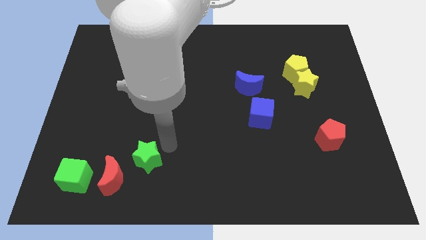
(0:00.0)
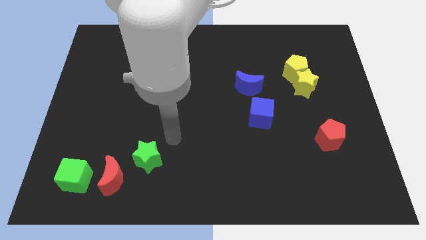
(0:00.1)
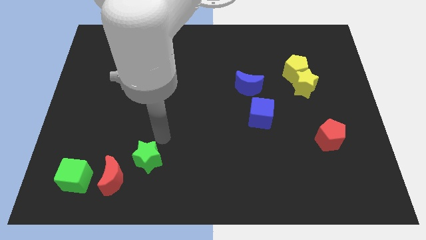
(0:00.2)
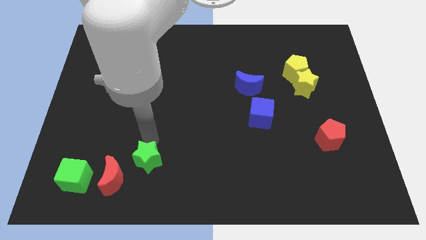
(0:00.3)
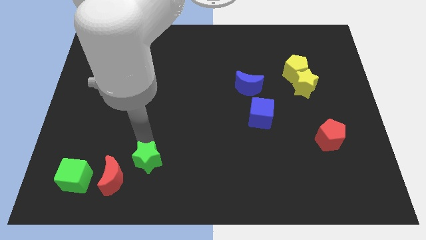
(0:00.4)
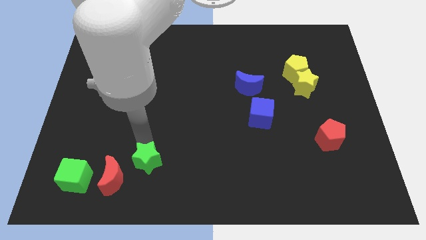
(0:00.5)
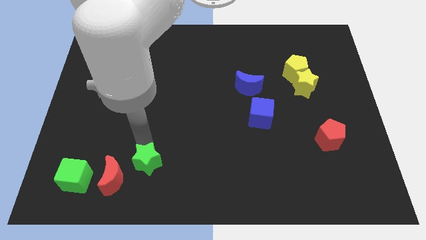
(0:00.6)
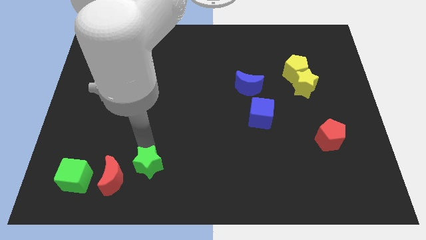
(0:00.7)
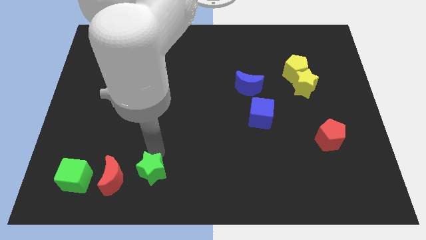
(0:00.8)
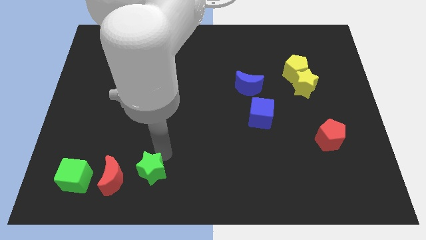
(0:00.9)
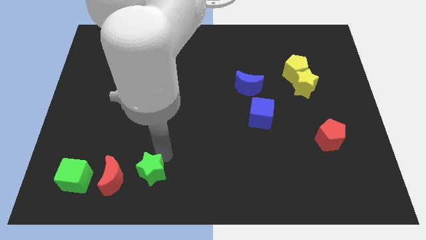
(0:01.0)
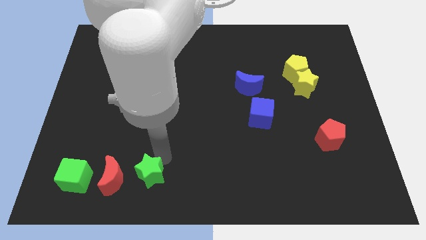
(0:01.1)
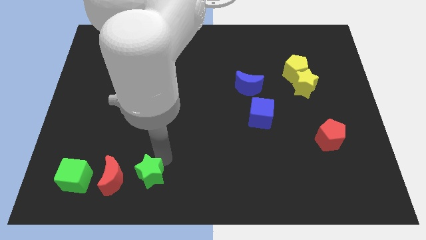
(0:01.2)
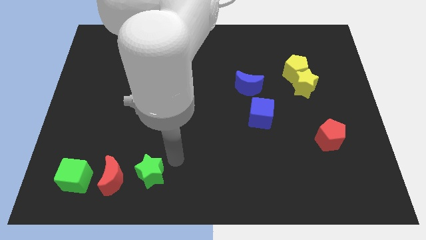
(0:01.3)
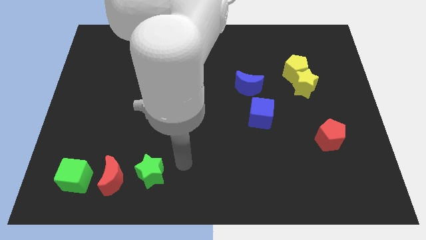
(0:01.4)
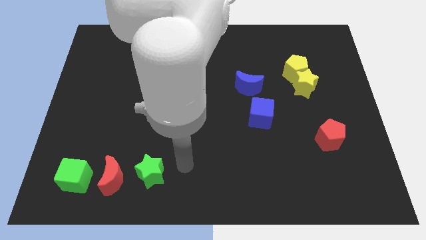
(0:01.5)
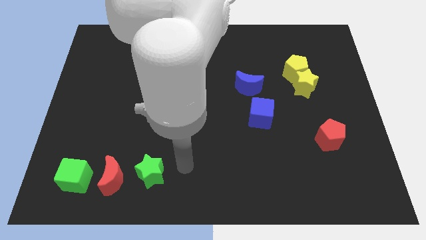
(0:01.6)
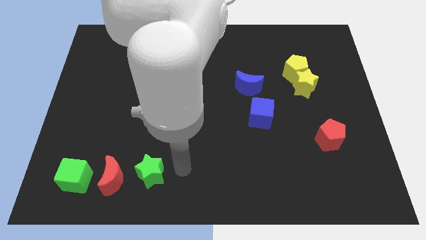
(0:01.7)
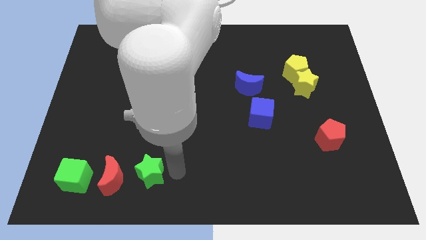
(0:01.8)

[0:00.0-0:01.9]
push the green star to the right of the red crescent

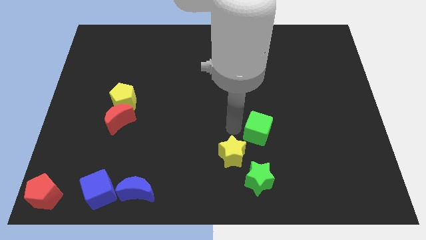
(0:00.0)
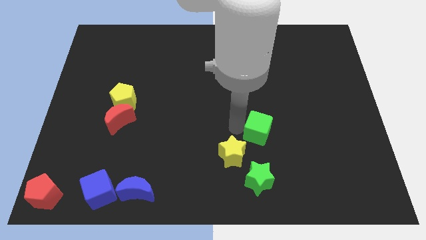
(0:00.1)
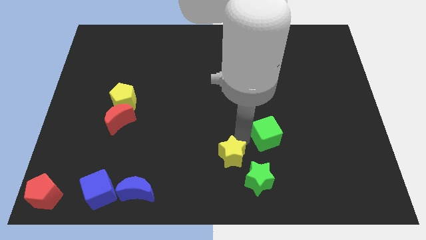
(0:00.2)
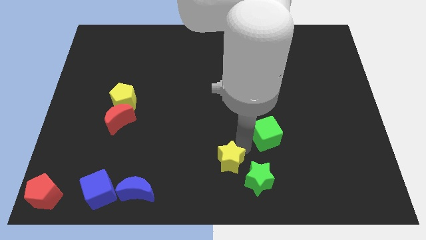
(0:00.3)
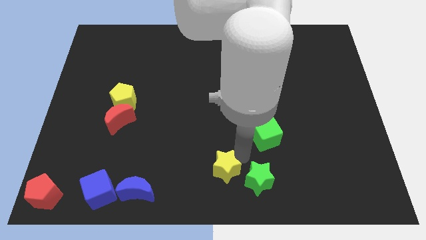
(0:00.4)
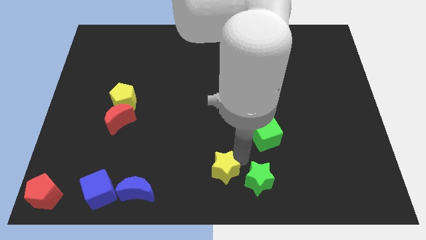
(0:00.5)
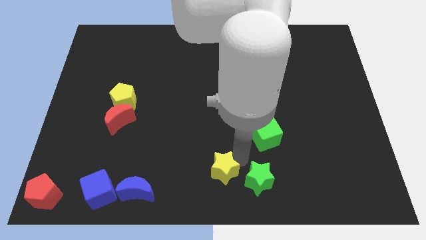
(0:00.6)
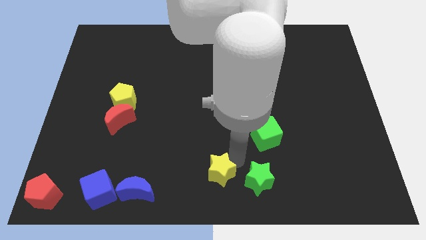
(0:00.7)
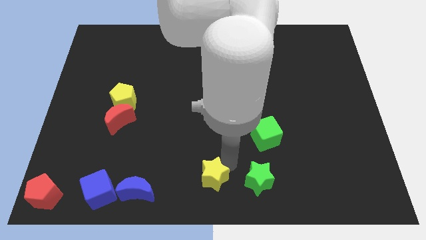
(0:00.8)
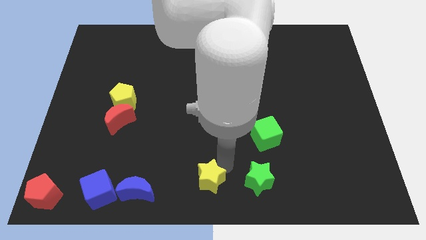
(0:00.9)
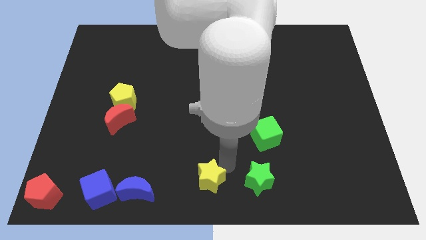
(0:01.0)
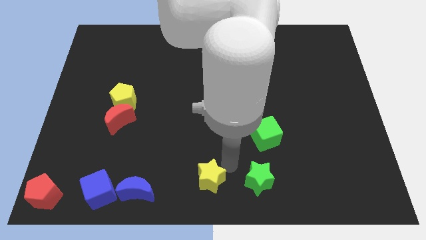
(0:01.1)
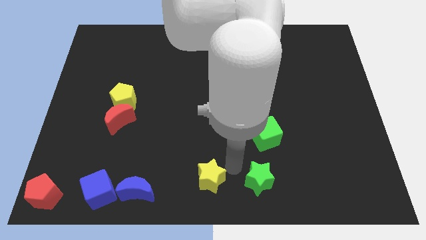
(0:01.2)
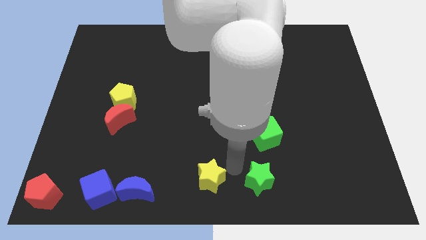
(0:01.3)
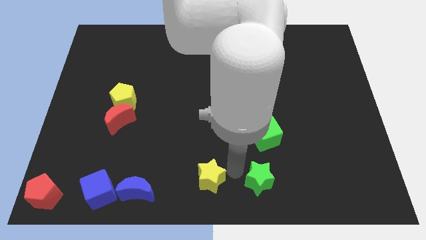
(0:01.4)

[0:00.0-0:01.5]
separate the green cube and yellow star

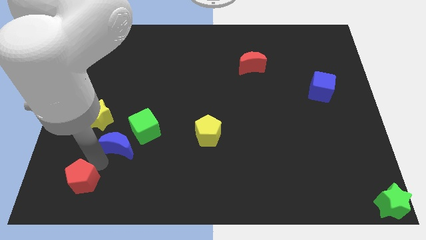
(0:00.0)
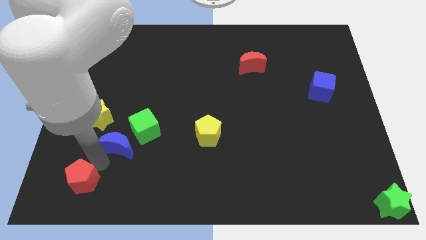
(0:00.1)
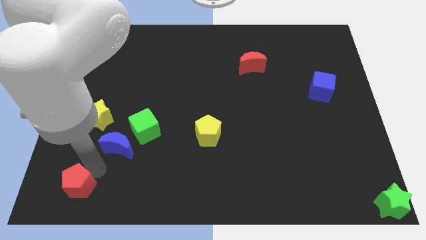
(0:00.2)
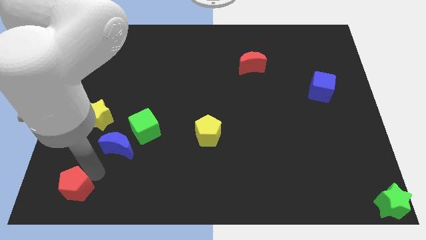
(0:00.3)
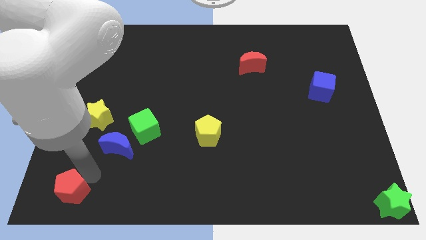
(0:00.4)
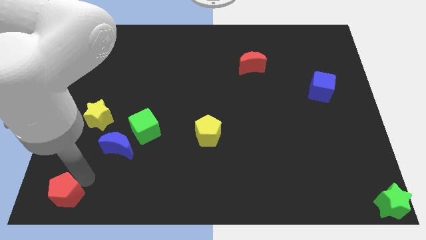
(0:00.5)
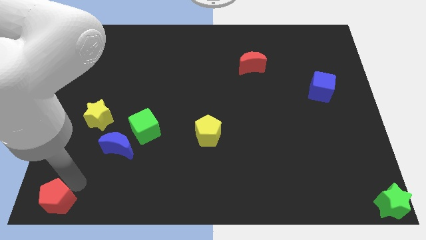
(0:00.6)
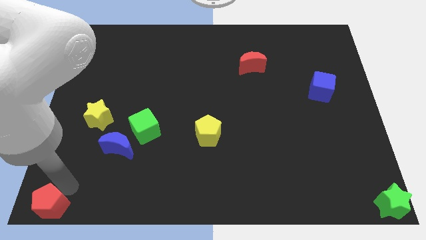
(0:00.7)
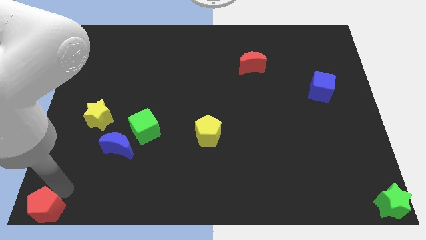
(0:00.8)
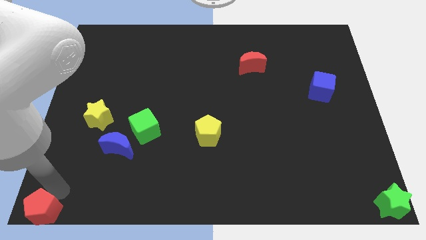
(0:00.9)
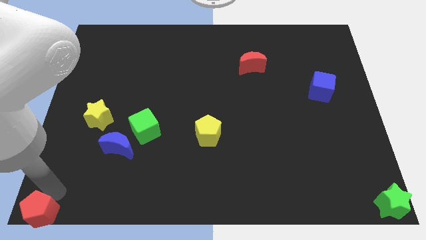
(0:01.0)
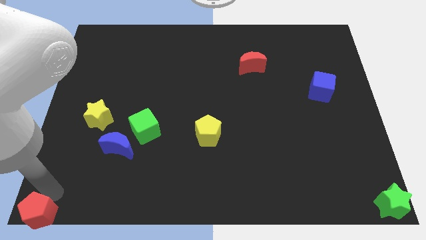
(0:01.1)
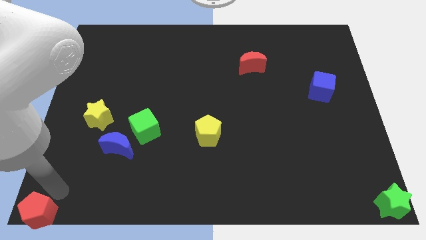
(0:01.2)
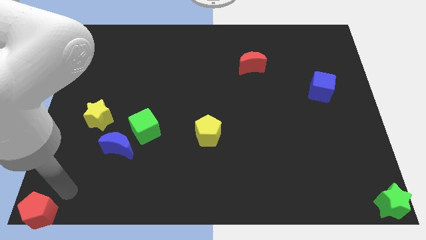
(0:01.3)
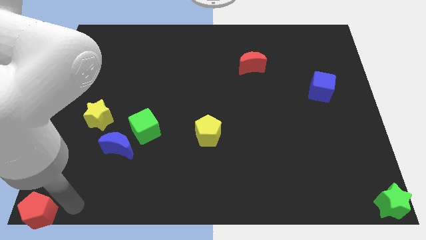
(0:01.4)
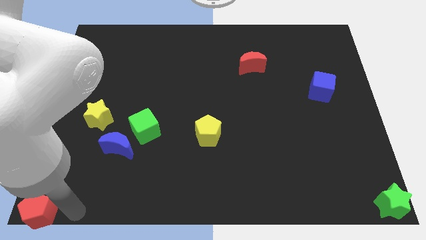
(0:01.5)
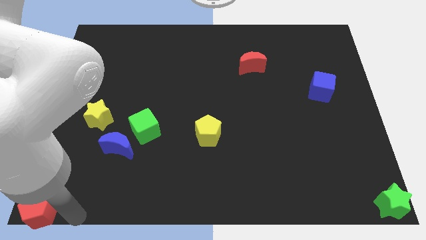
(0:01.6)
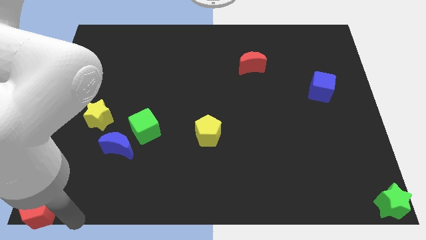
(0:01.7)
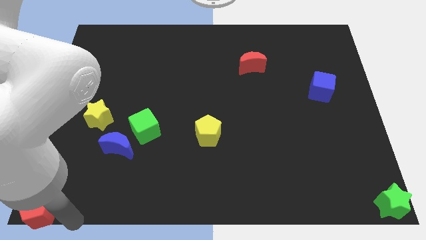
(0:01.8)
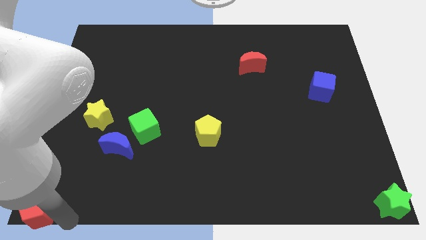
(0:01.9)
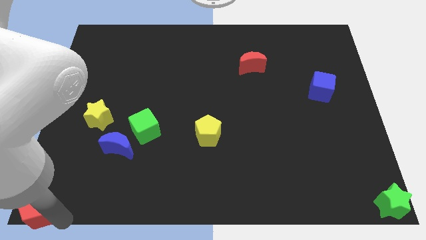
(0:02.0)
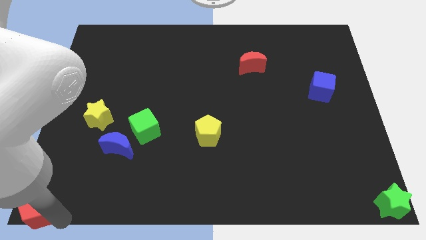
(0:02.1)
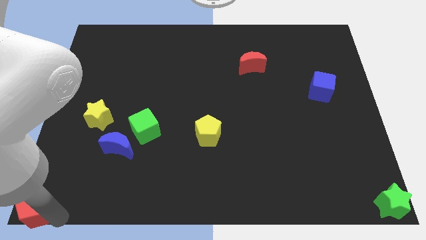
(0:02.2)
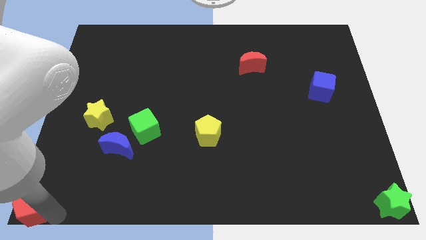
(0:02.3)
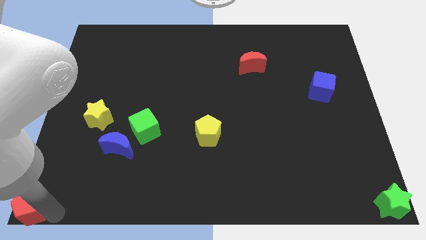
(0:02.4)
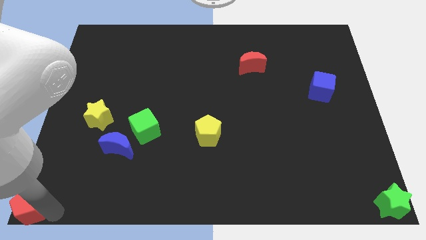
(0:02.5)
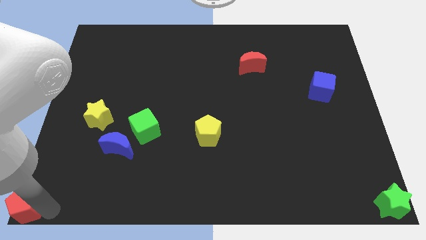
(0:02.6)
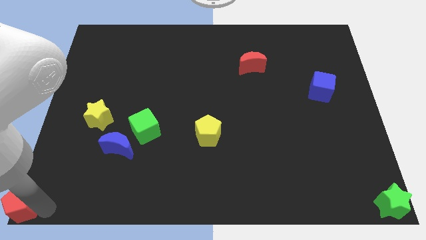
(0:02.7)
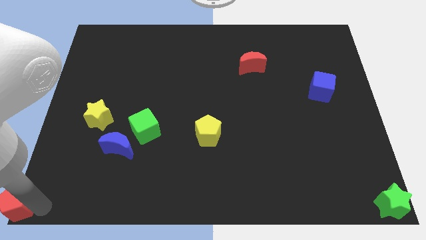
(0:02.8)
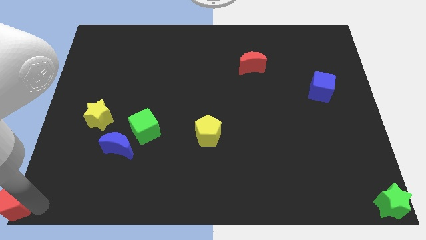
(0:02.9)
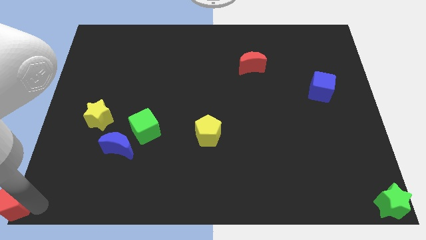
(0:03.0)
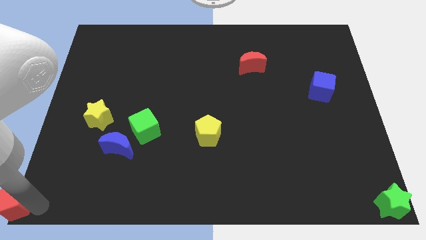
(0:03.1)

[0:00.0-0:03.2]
move red pentagon to the bottom left corner

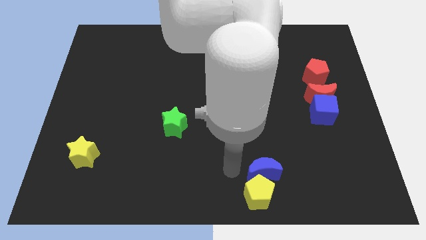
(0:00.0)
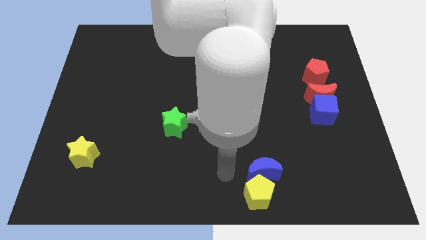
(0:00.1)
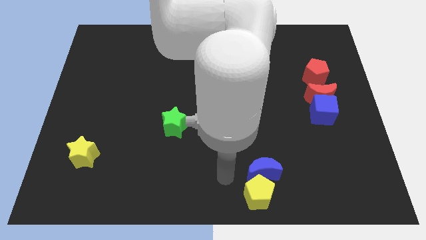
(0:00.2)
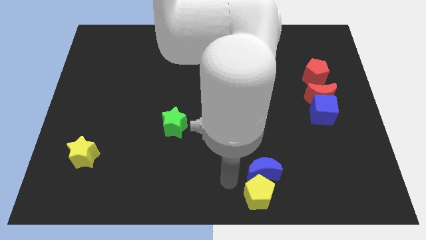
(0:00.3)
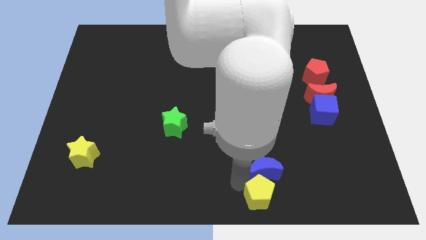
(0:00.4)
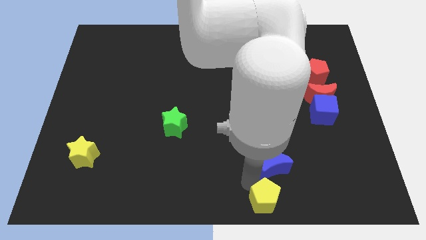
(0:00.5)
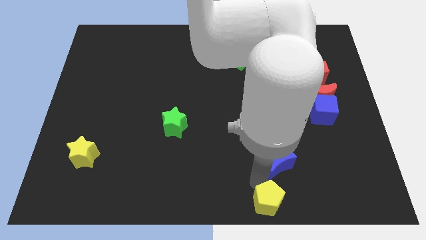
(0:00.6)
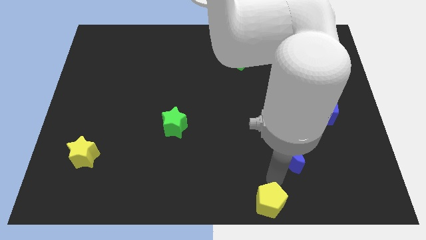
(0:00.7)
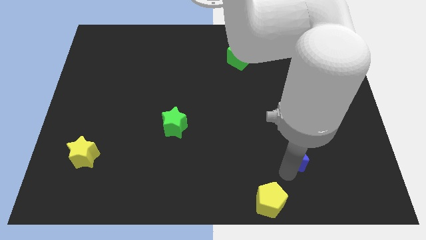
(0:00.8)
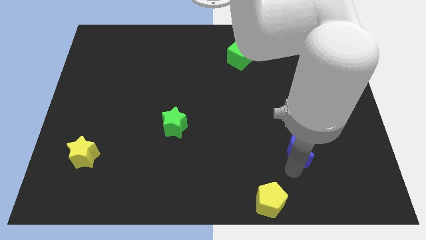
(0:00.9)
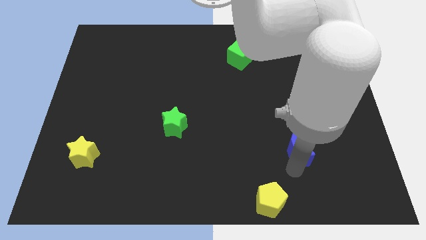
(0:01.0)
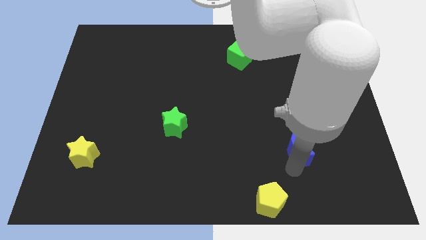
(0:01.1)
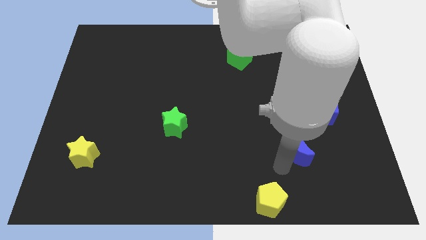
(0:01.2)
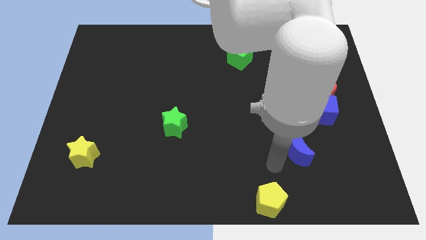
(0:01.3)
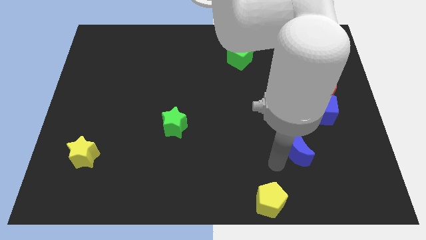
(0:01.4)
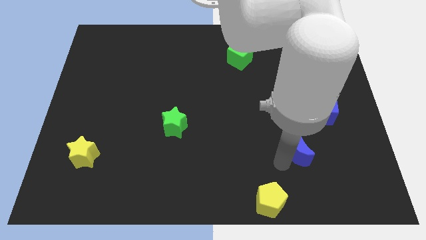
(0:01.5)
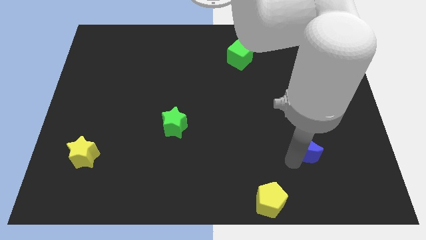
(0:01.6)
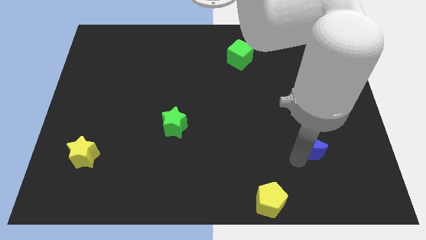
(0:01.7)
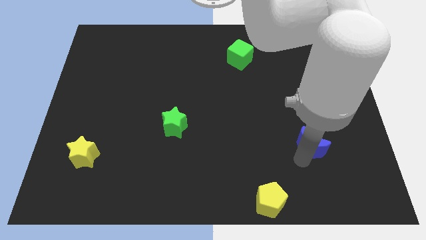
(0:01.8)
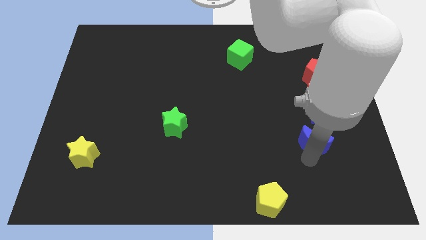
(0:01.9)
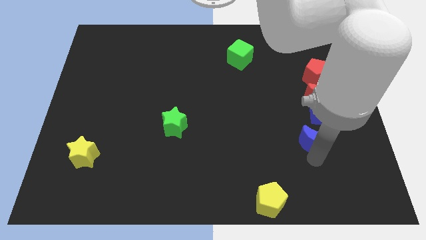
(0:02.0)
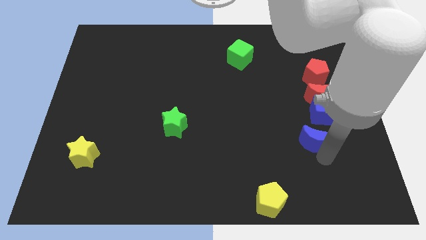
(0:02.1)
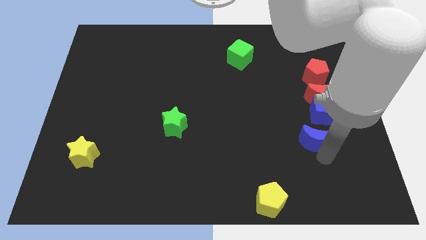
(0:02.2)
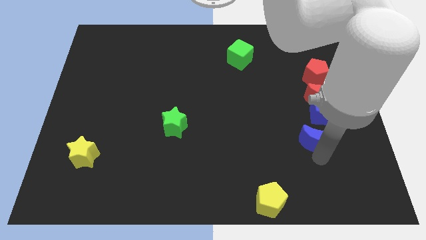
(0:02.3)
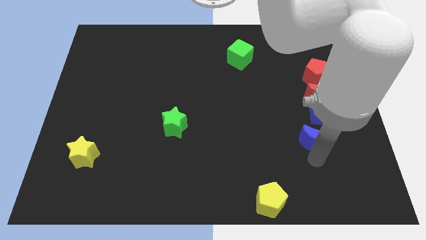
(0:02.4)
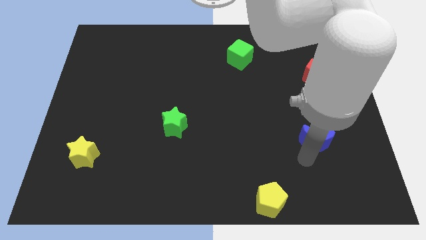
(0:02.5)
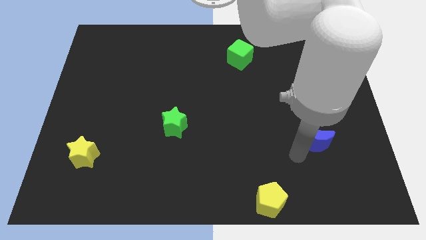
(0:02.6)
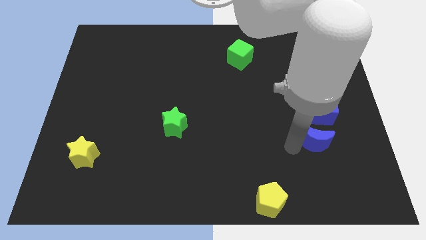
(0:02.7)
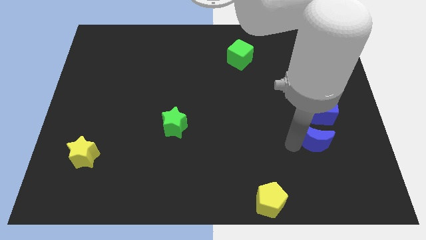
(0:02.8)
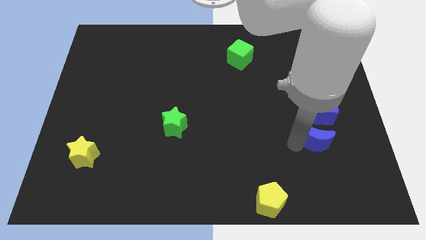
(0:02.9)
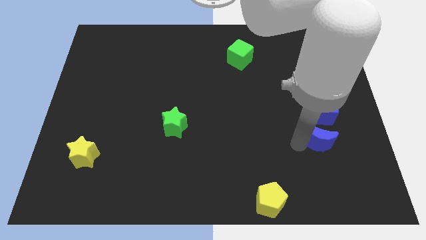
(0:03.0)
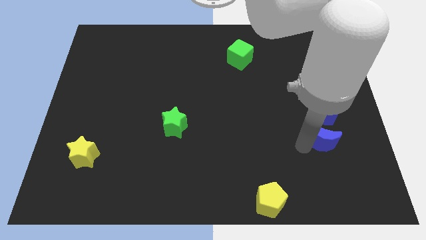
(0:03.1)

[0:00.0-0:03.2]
move the blue moon away from the yellow pentagon
